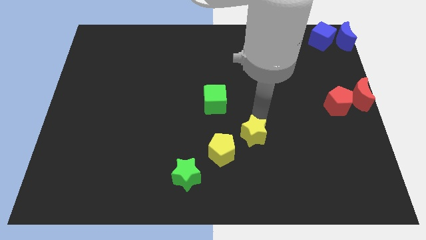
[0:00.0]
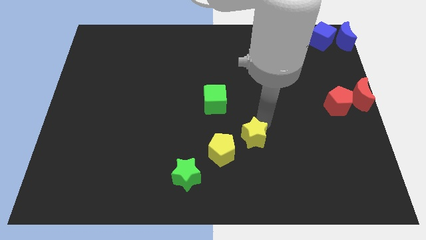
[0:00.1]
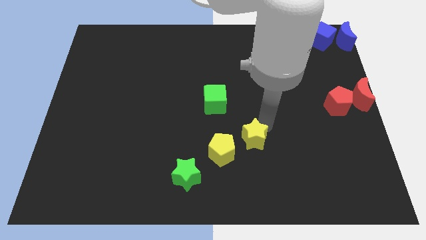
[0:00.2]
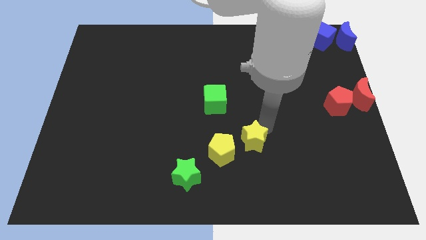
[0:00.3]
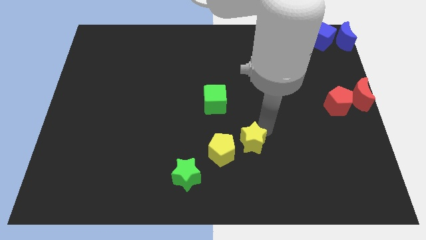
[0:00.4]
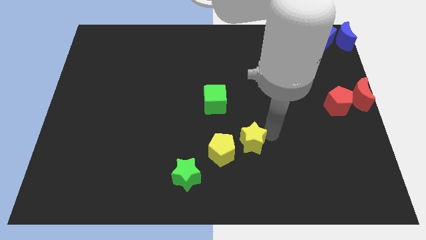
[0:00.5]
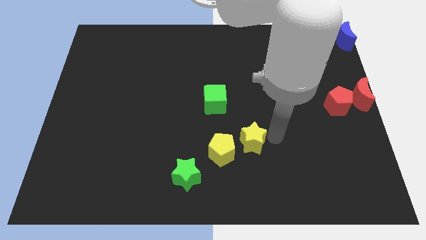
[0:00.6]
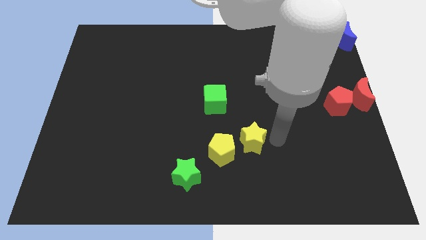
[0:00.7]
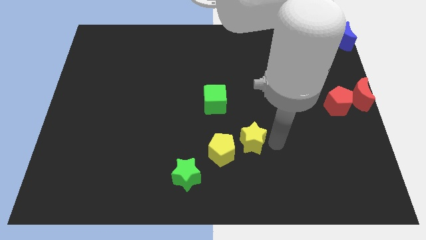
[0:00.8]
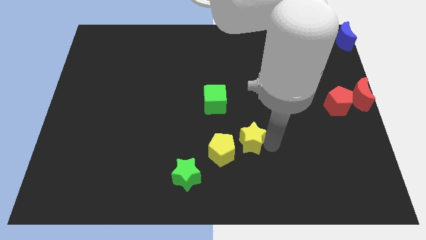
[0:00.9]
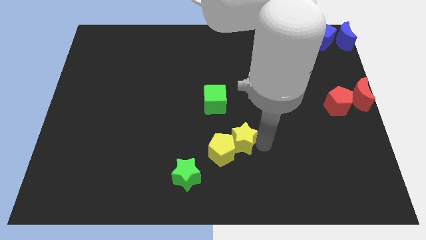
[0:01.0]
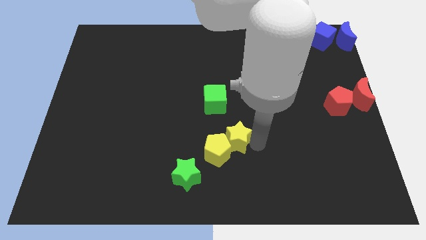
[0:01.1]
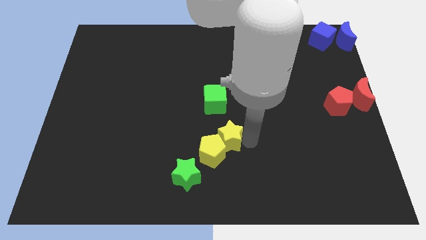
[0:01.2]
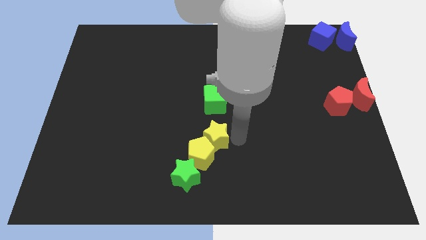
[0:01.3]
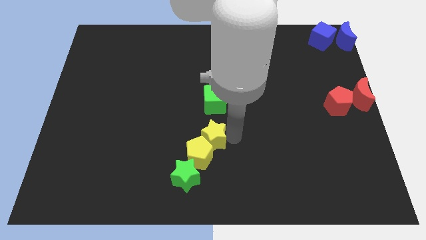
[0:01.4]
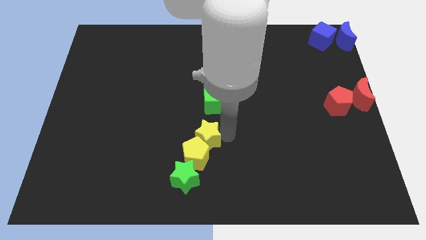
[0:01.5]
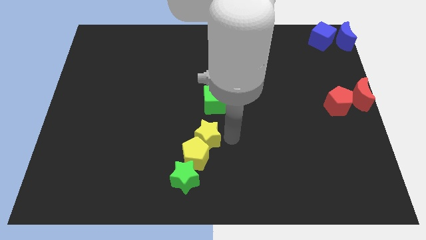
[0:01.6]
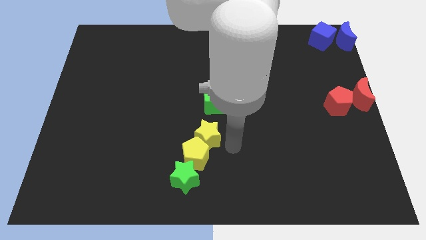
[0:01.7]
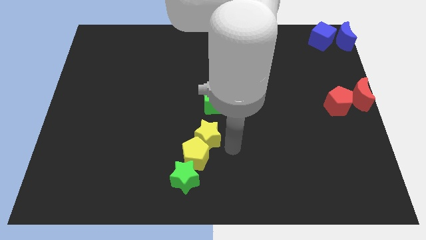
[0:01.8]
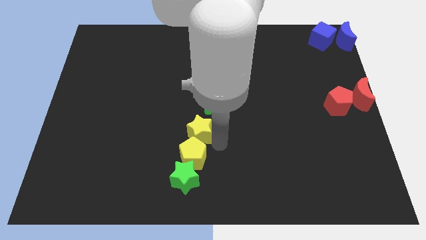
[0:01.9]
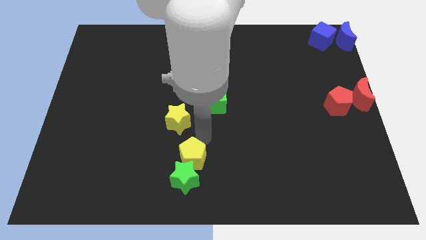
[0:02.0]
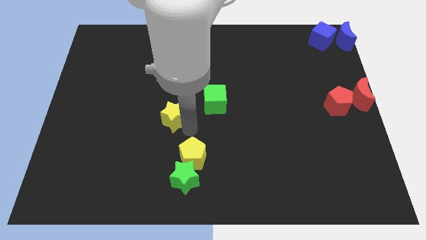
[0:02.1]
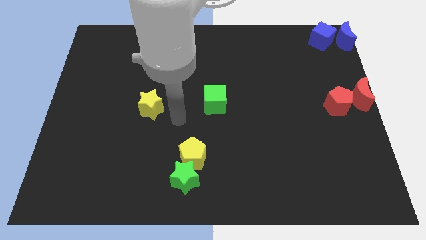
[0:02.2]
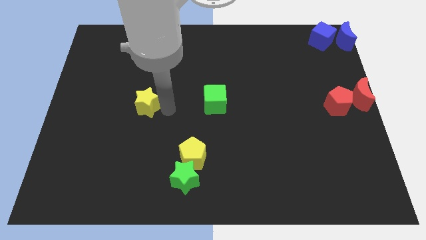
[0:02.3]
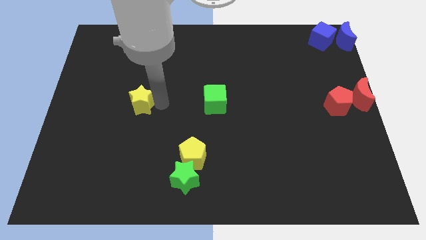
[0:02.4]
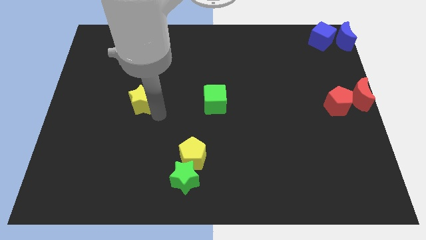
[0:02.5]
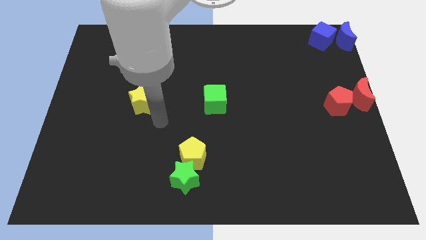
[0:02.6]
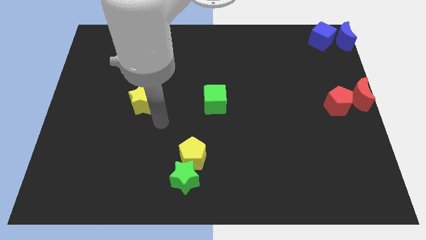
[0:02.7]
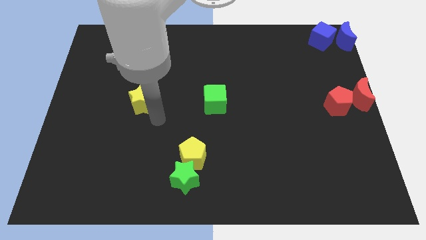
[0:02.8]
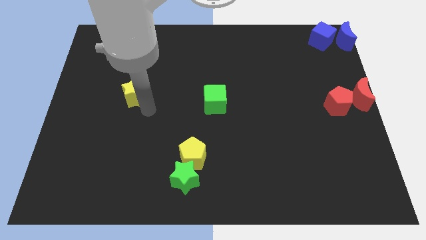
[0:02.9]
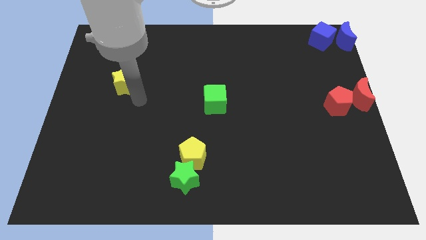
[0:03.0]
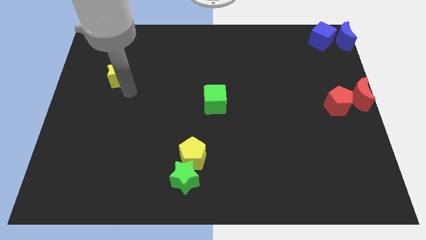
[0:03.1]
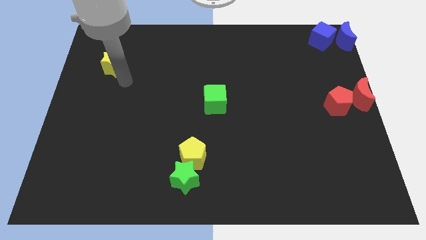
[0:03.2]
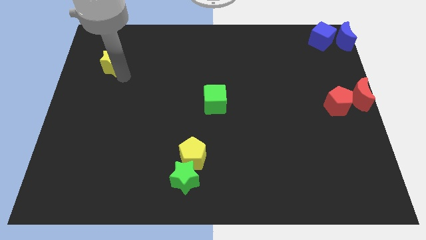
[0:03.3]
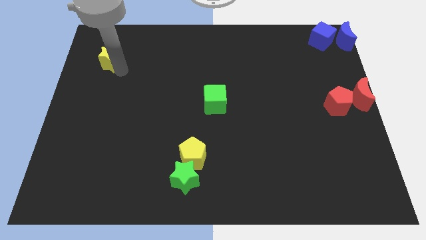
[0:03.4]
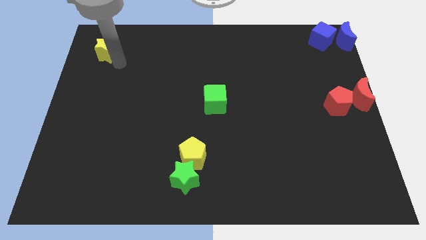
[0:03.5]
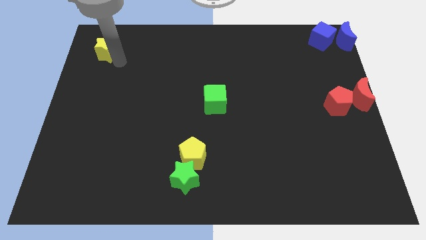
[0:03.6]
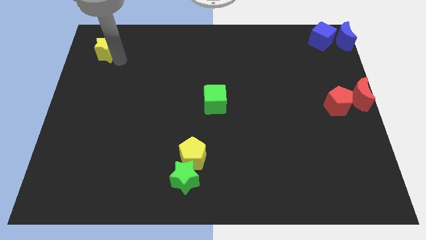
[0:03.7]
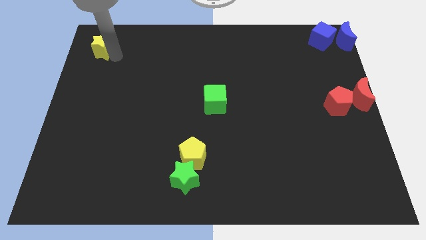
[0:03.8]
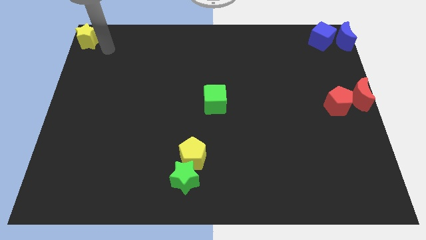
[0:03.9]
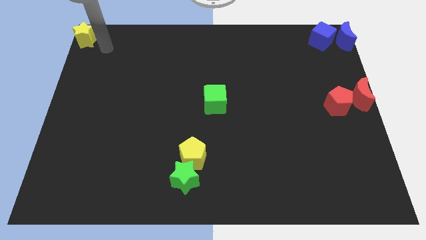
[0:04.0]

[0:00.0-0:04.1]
slide the yellow star into the top left corner

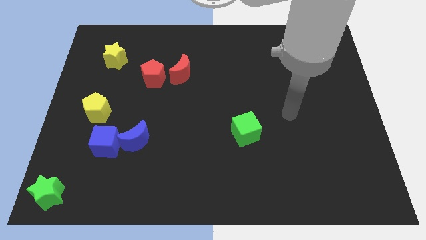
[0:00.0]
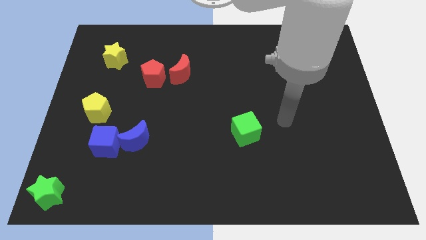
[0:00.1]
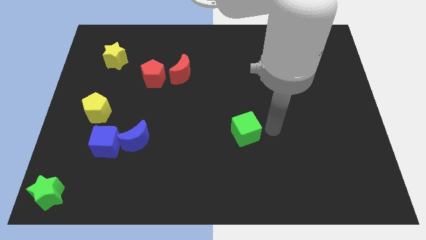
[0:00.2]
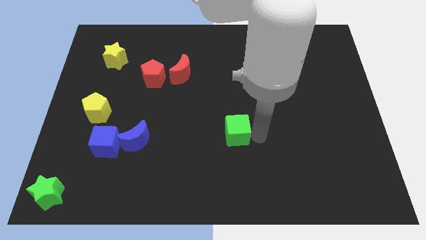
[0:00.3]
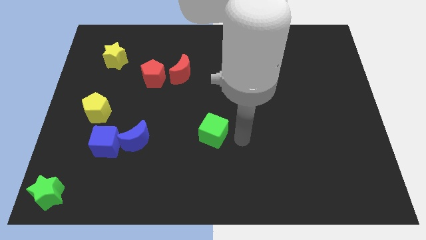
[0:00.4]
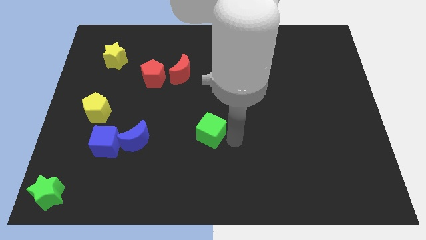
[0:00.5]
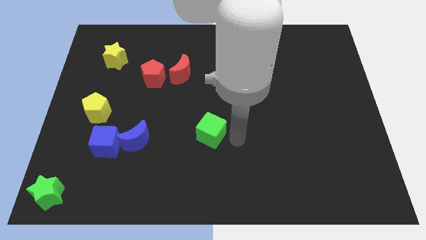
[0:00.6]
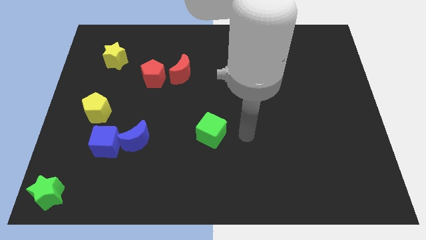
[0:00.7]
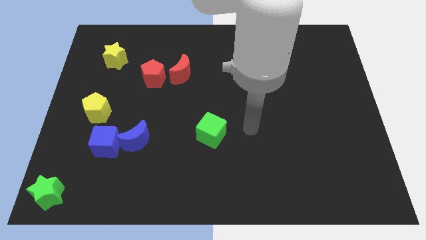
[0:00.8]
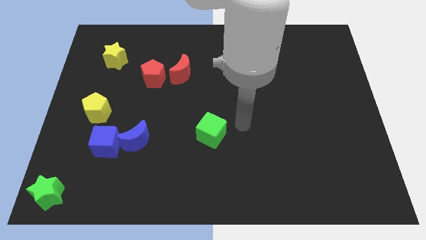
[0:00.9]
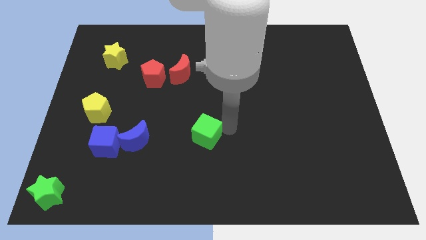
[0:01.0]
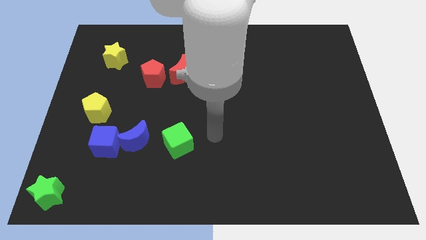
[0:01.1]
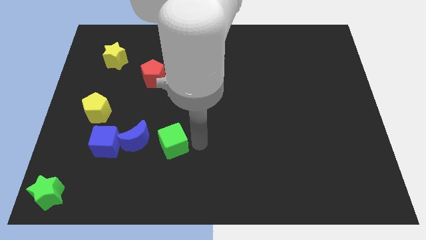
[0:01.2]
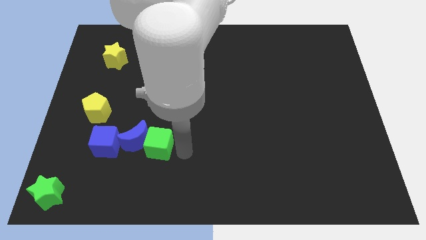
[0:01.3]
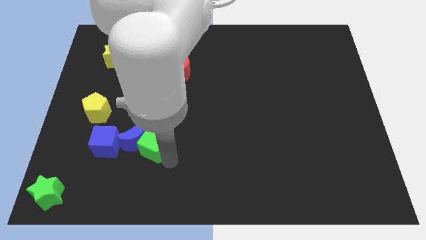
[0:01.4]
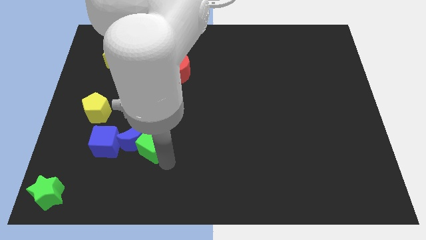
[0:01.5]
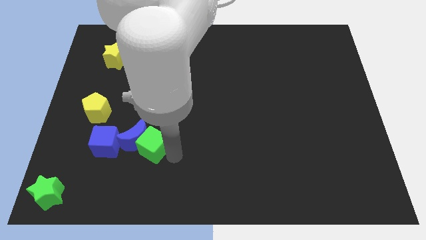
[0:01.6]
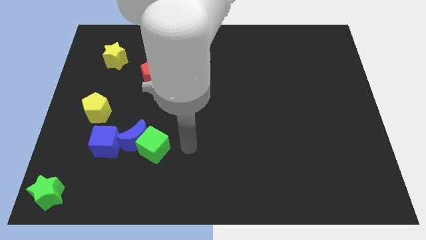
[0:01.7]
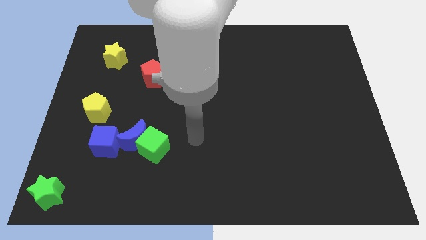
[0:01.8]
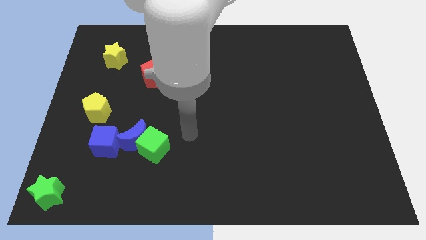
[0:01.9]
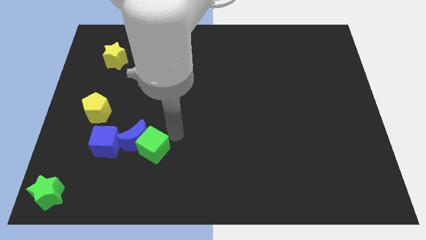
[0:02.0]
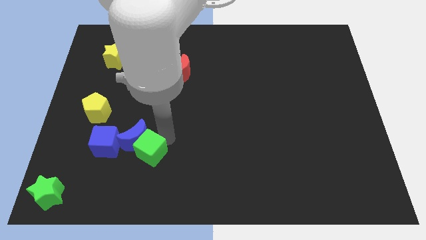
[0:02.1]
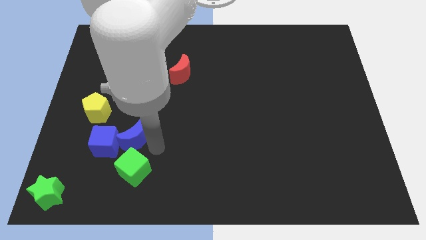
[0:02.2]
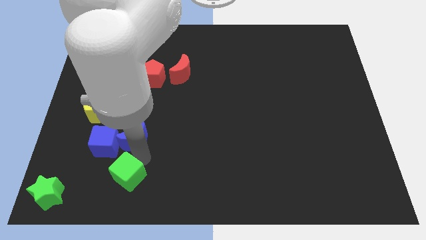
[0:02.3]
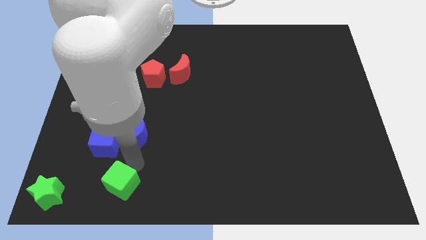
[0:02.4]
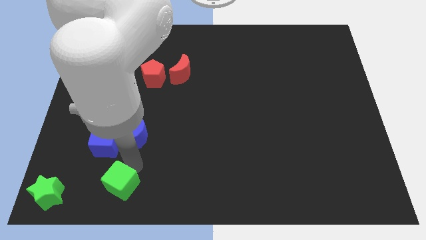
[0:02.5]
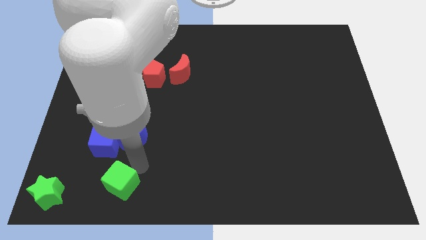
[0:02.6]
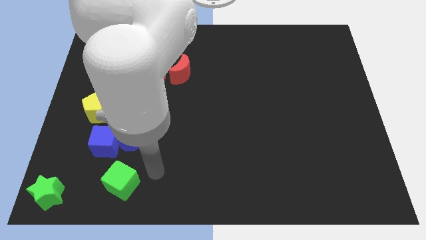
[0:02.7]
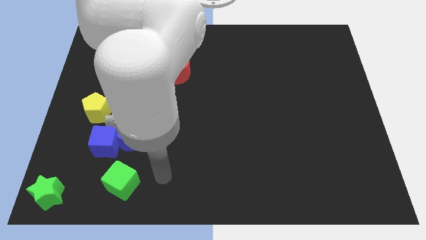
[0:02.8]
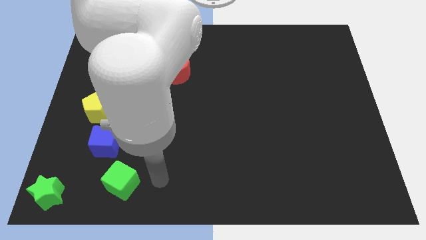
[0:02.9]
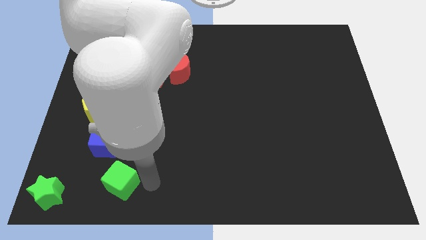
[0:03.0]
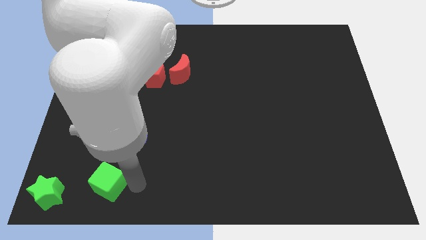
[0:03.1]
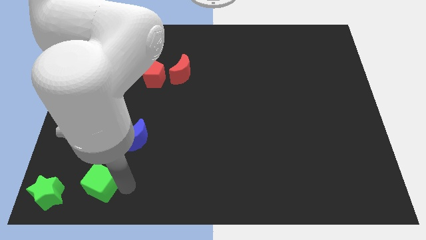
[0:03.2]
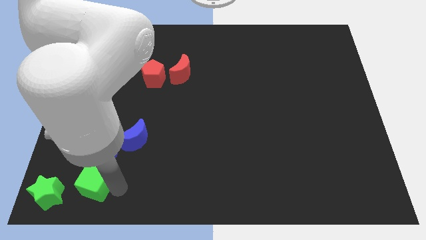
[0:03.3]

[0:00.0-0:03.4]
push green cube below blue cube

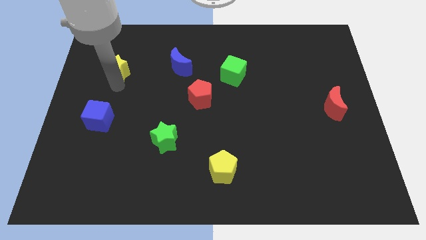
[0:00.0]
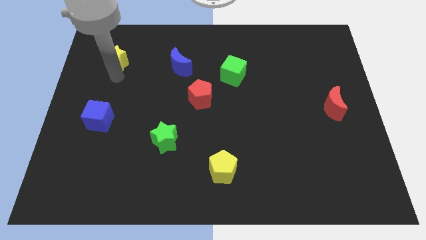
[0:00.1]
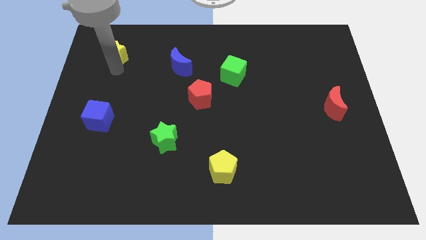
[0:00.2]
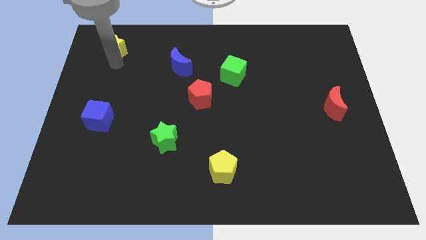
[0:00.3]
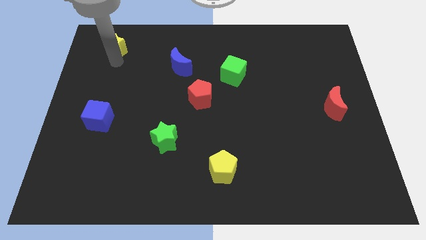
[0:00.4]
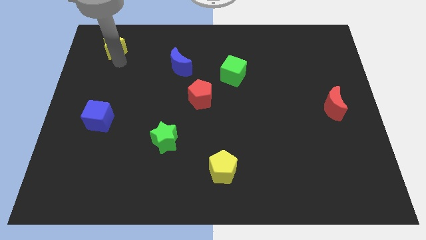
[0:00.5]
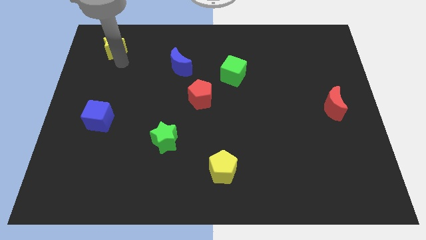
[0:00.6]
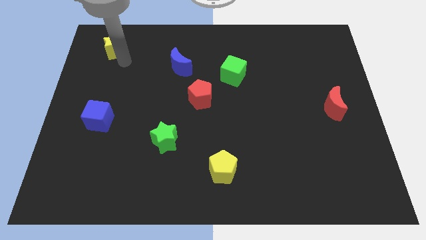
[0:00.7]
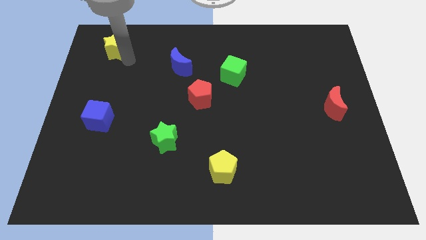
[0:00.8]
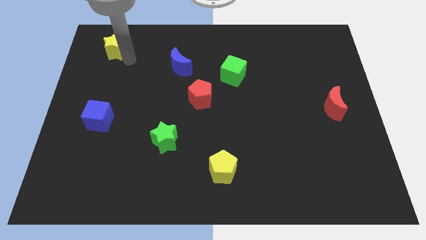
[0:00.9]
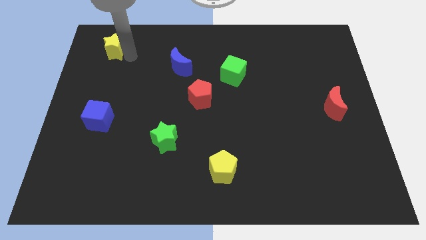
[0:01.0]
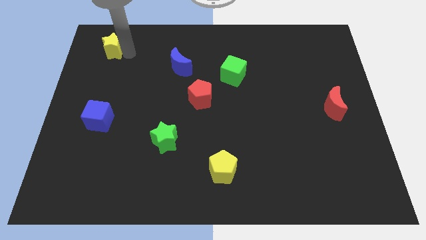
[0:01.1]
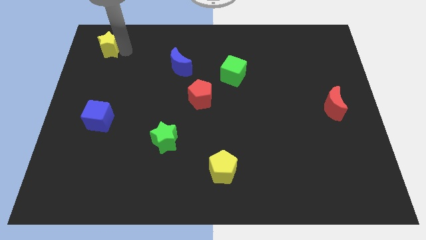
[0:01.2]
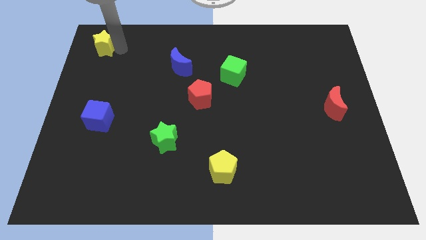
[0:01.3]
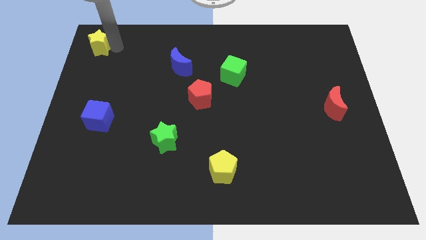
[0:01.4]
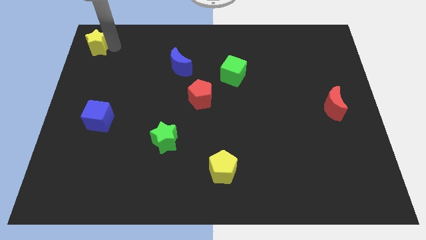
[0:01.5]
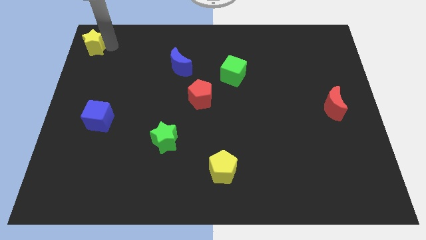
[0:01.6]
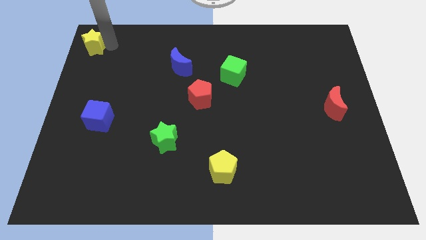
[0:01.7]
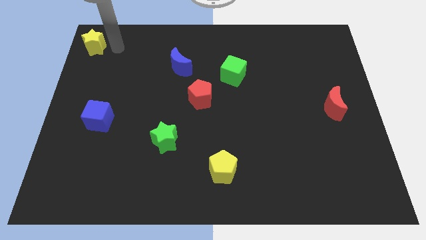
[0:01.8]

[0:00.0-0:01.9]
push the yellow star to the top left of the board
